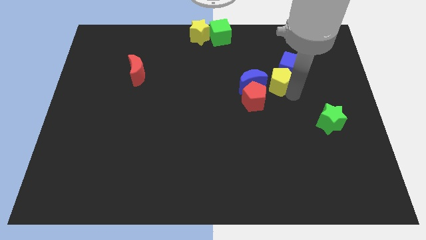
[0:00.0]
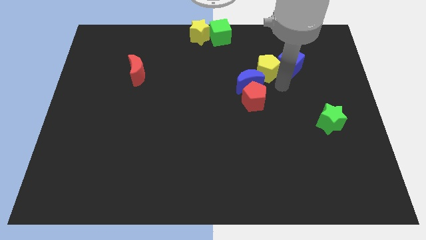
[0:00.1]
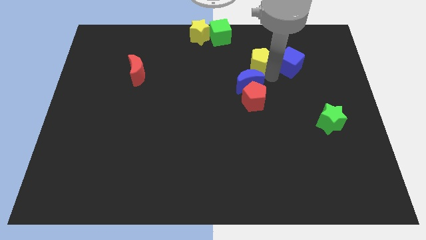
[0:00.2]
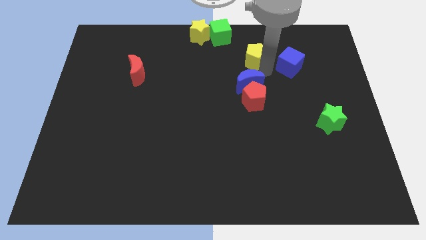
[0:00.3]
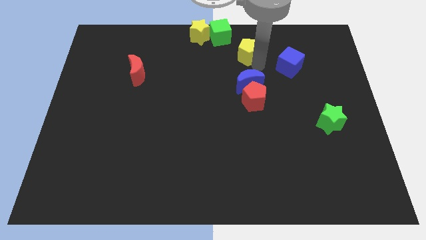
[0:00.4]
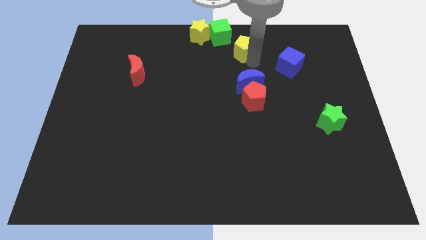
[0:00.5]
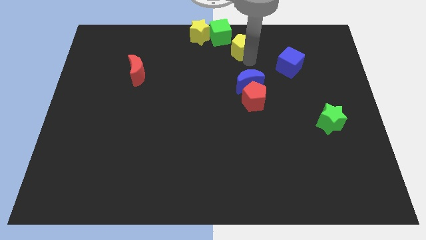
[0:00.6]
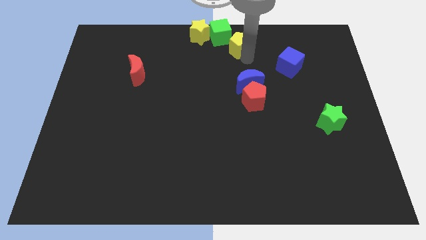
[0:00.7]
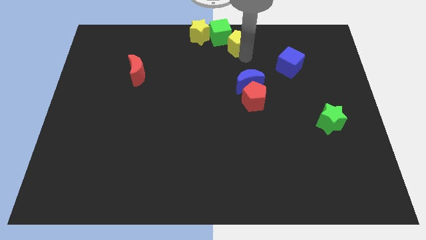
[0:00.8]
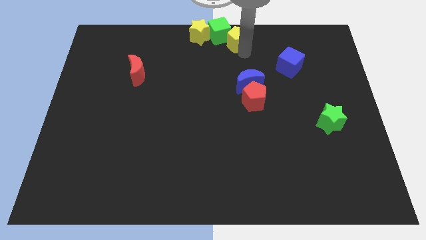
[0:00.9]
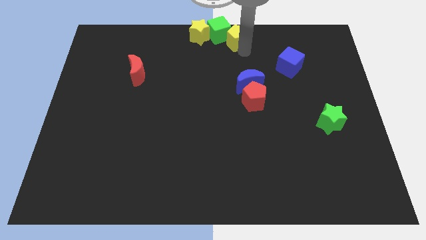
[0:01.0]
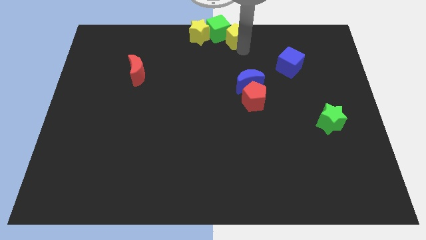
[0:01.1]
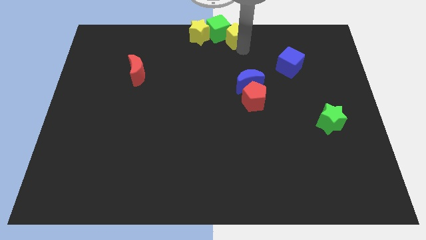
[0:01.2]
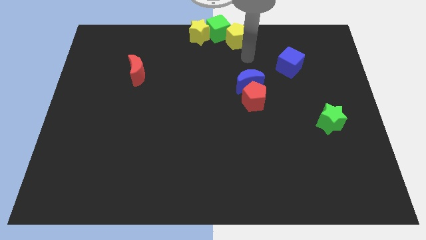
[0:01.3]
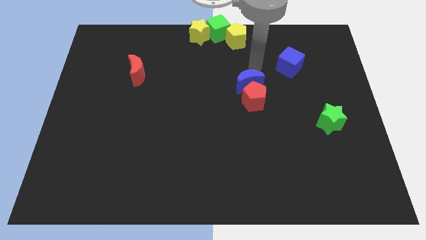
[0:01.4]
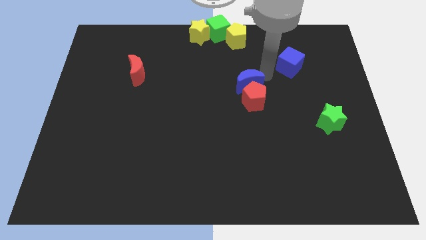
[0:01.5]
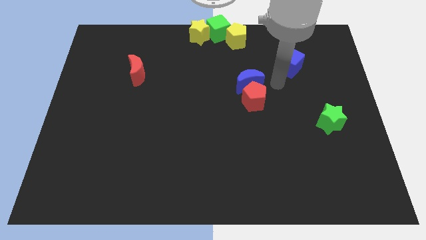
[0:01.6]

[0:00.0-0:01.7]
push the yellow pentagon into the green cube

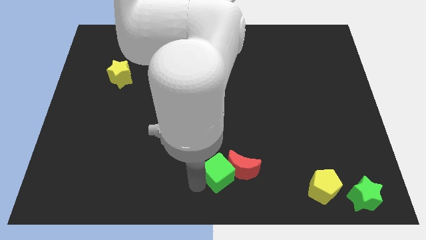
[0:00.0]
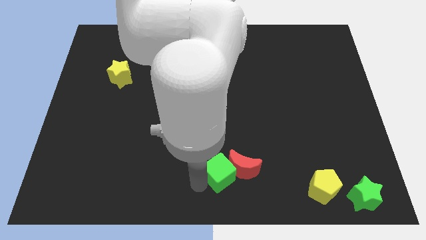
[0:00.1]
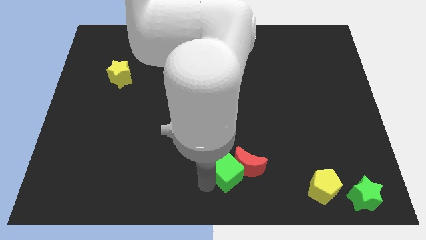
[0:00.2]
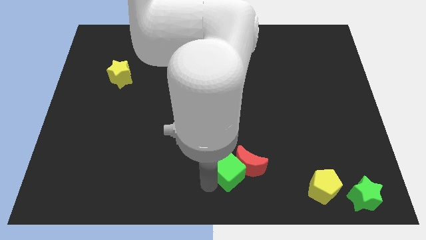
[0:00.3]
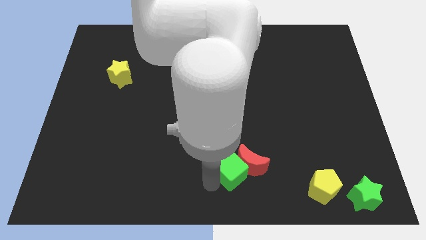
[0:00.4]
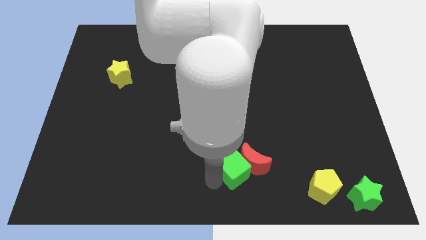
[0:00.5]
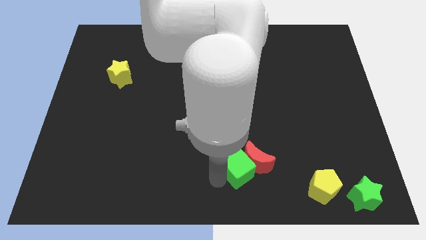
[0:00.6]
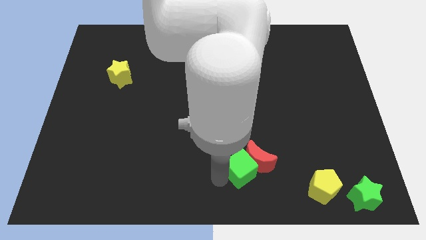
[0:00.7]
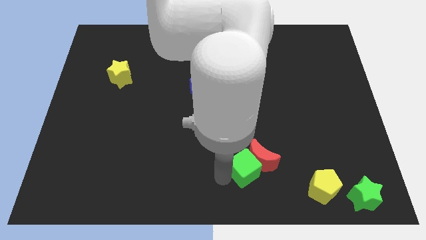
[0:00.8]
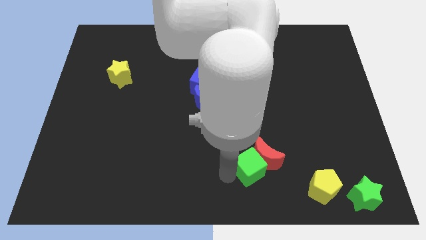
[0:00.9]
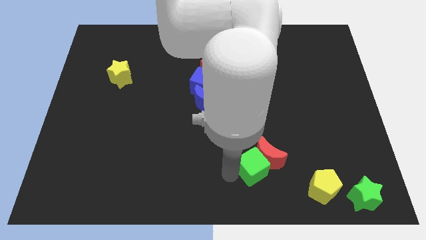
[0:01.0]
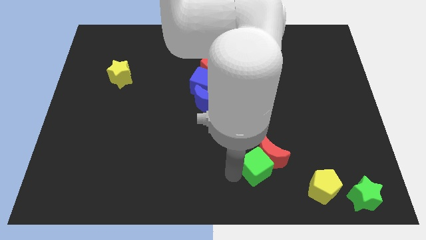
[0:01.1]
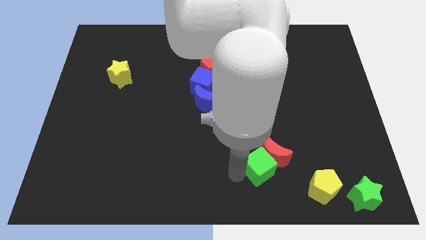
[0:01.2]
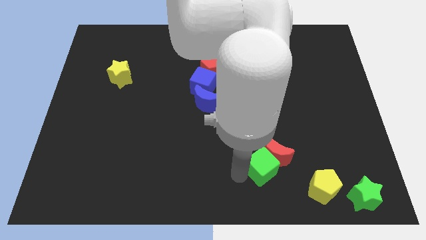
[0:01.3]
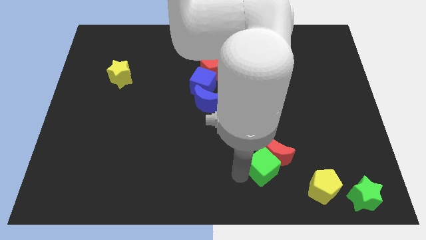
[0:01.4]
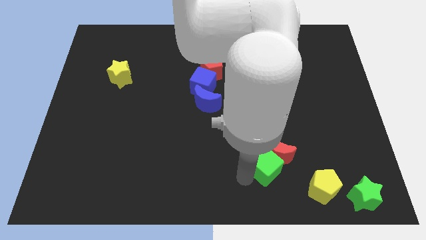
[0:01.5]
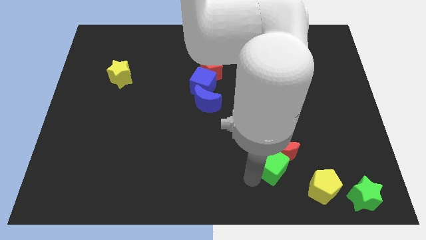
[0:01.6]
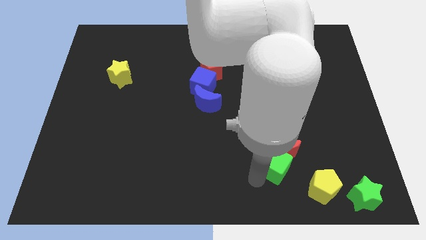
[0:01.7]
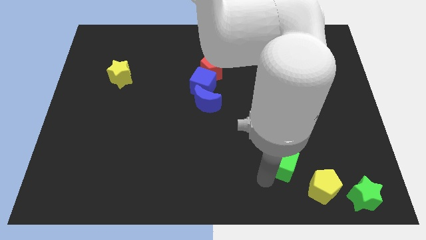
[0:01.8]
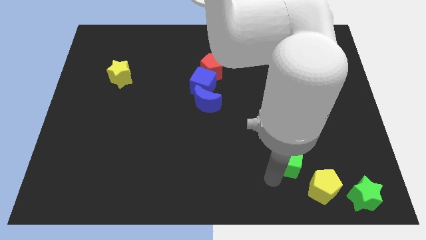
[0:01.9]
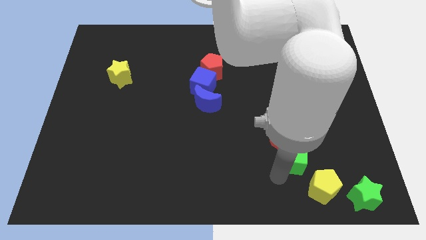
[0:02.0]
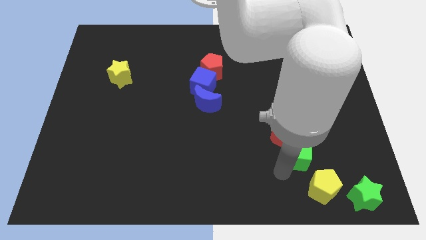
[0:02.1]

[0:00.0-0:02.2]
push red moon with the green cube

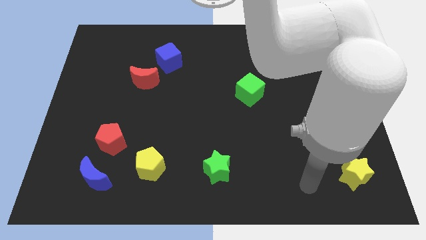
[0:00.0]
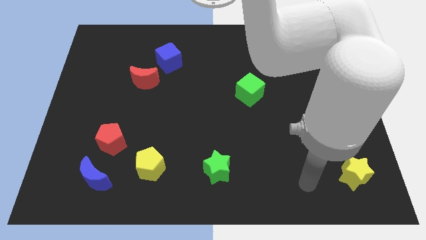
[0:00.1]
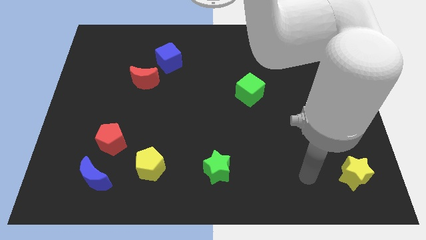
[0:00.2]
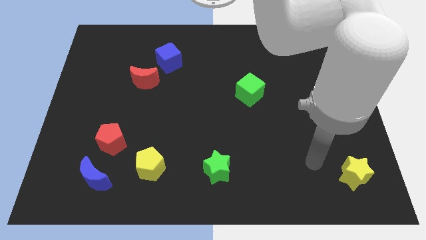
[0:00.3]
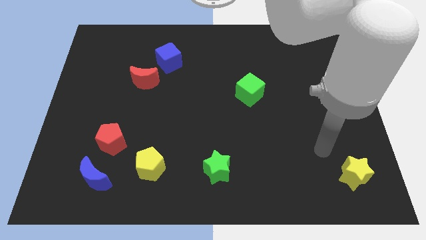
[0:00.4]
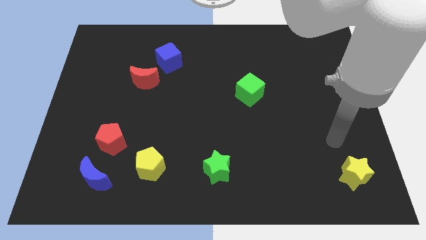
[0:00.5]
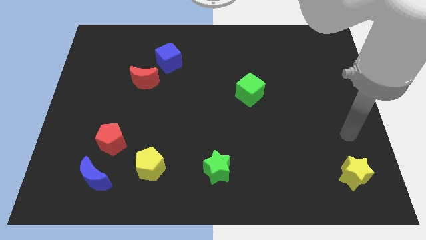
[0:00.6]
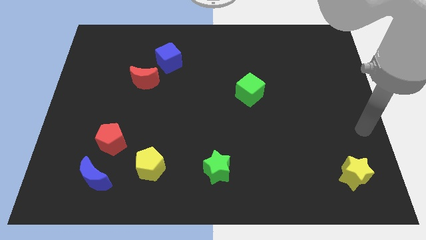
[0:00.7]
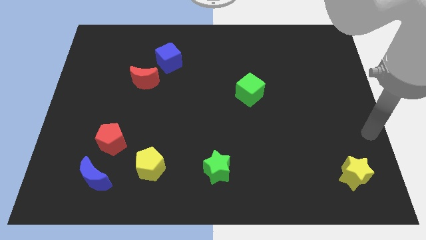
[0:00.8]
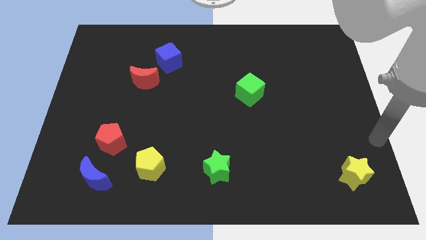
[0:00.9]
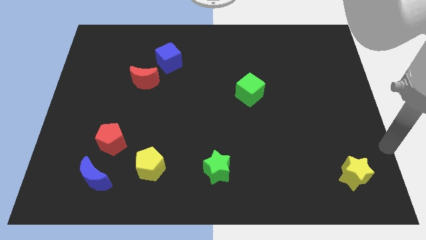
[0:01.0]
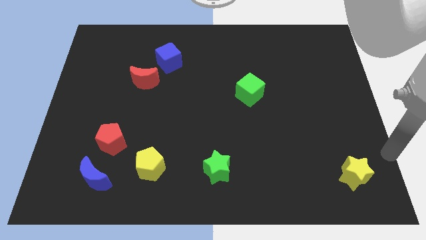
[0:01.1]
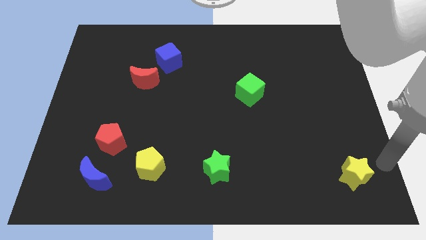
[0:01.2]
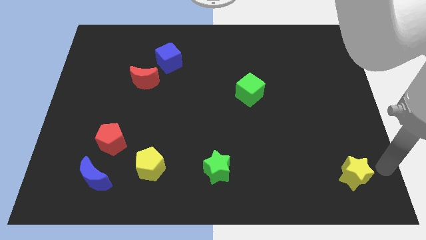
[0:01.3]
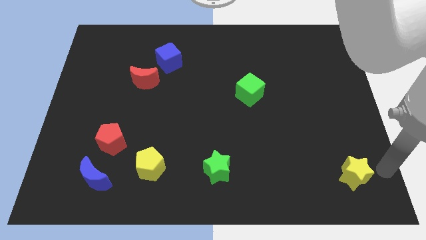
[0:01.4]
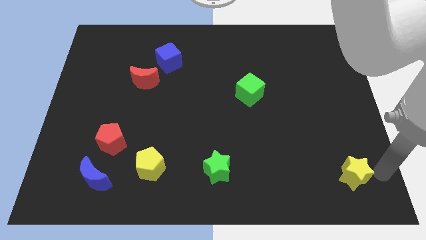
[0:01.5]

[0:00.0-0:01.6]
push the arm to the right of the yellow star

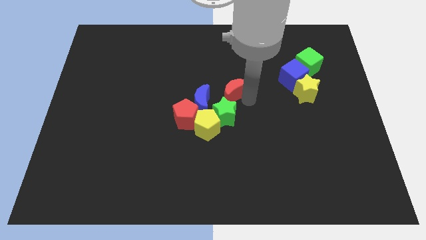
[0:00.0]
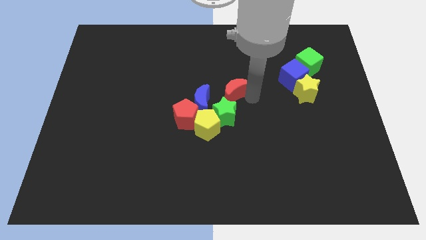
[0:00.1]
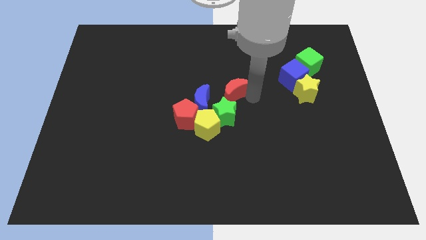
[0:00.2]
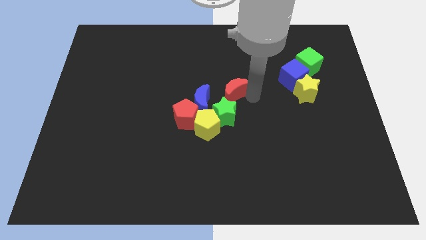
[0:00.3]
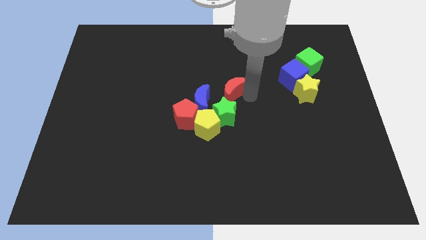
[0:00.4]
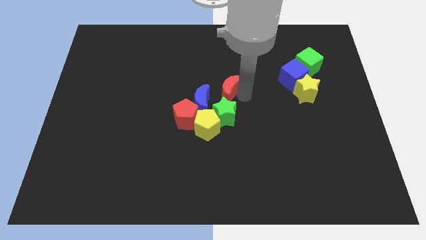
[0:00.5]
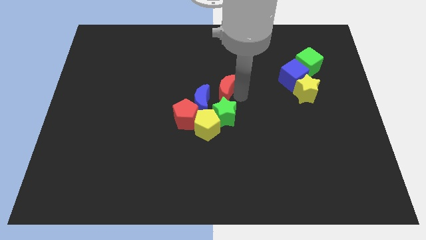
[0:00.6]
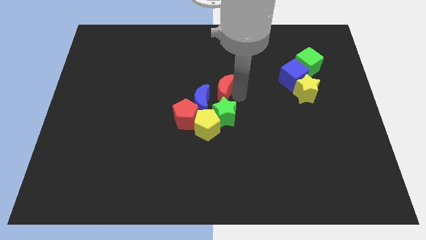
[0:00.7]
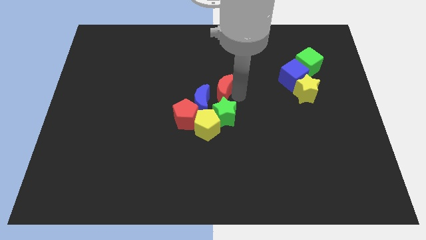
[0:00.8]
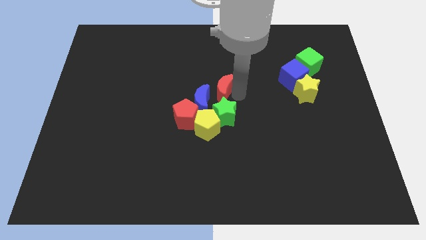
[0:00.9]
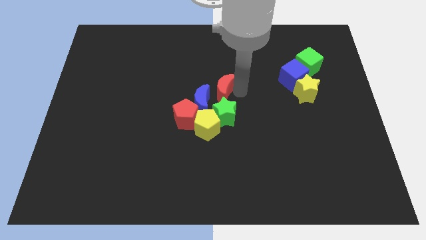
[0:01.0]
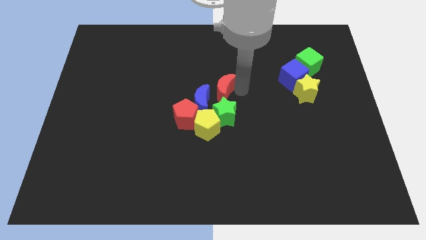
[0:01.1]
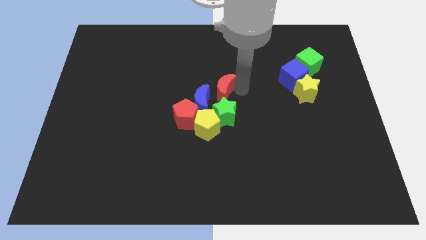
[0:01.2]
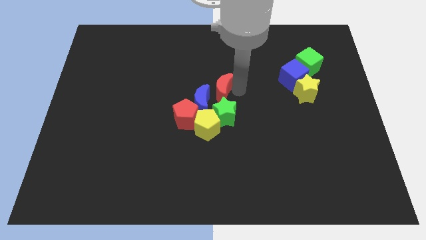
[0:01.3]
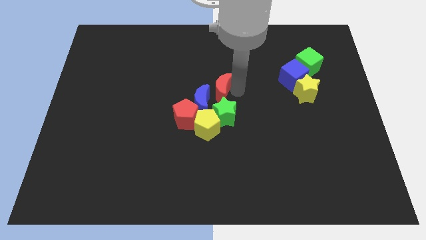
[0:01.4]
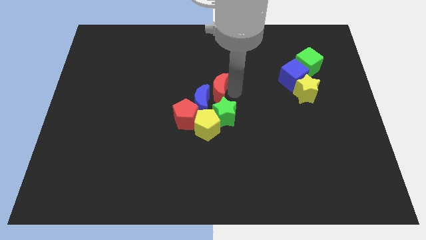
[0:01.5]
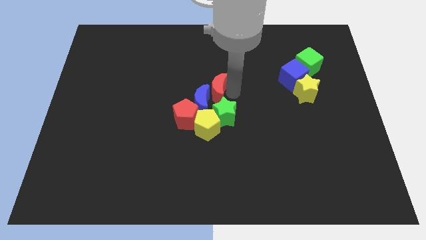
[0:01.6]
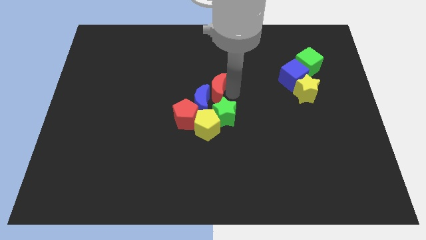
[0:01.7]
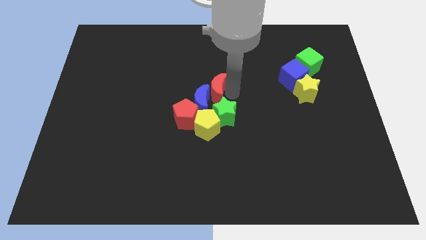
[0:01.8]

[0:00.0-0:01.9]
push the red crescent towards the blue crescent

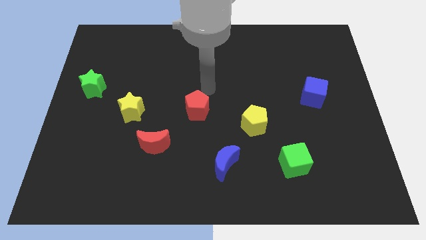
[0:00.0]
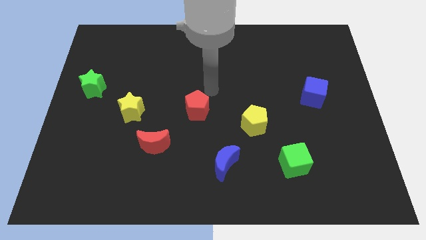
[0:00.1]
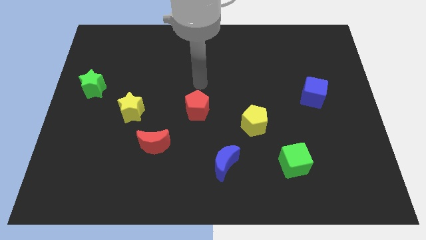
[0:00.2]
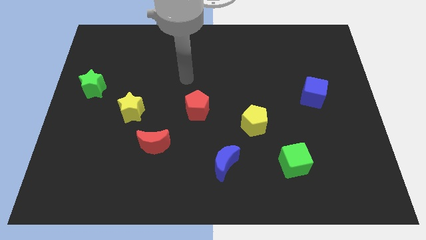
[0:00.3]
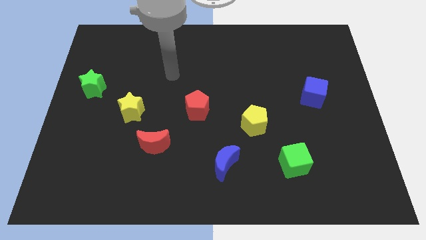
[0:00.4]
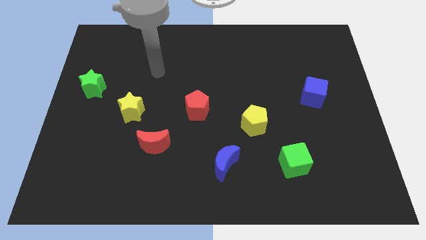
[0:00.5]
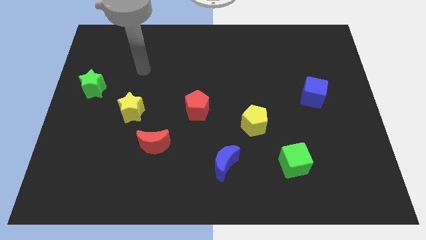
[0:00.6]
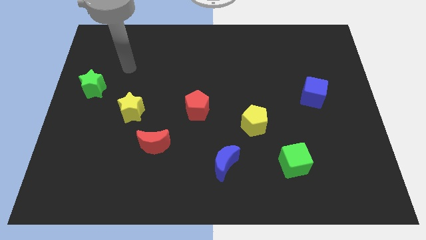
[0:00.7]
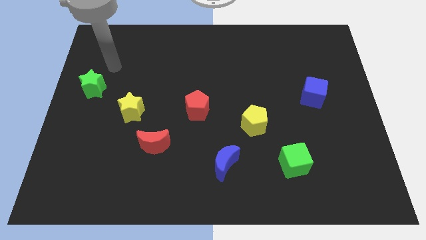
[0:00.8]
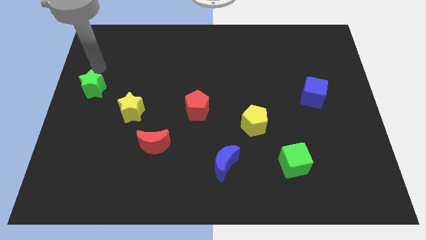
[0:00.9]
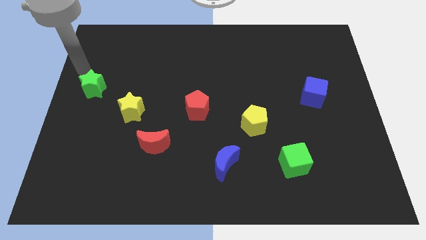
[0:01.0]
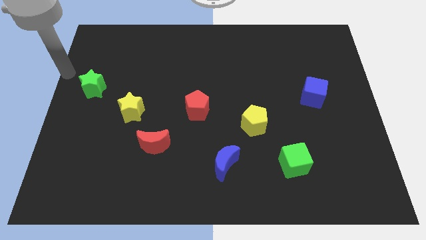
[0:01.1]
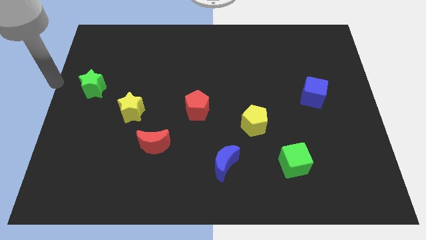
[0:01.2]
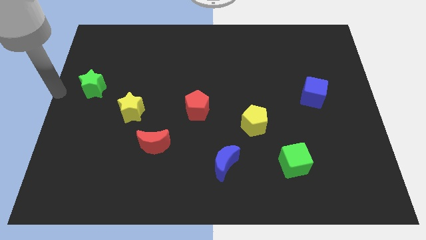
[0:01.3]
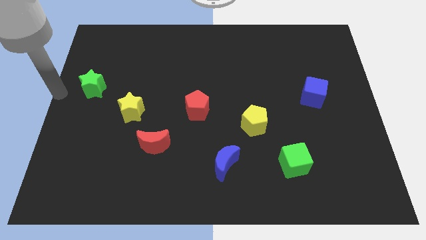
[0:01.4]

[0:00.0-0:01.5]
move your arm to the left of the green star
